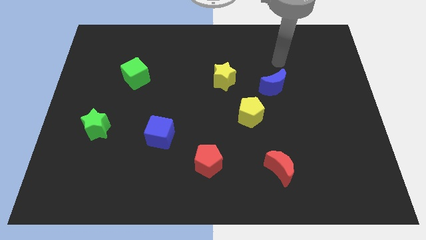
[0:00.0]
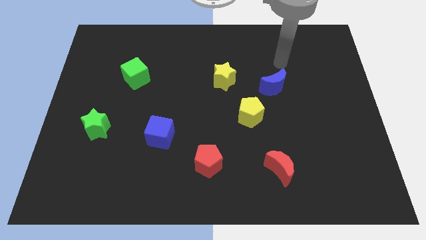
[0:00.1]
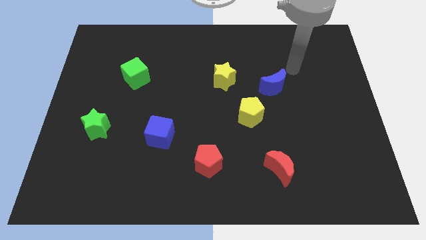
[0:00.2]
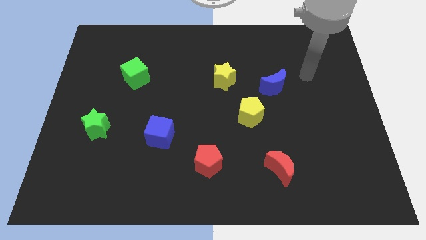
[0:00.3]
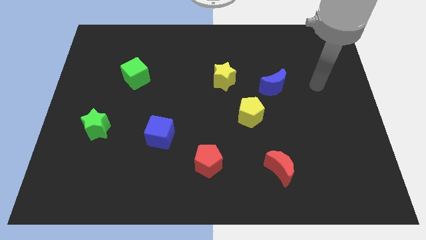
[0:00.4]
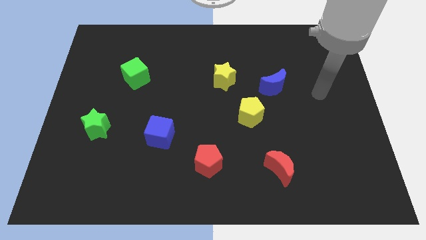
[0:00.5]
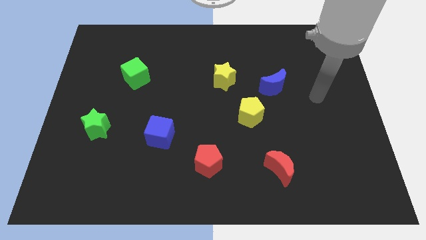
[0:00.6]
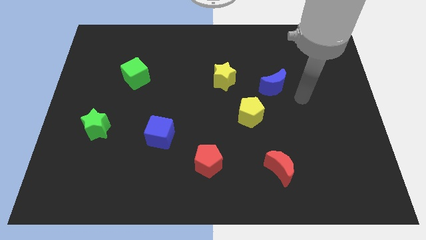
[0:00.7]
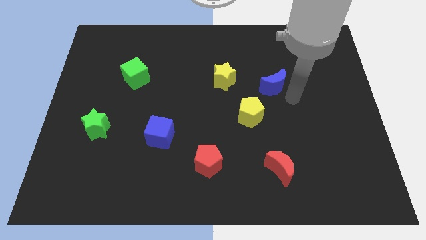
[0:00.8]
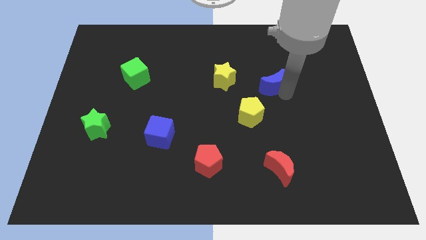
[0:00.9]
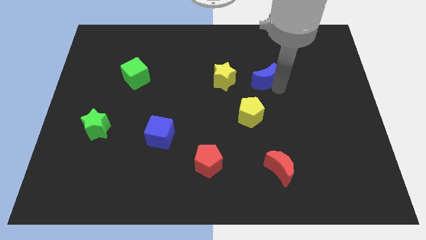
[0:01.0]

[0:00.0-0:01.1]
move the blue moon slightly towards the top side

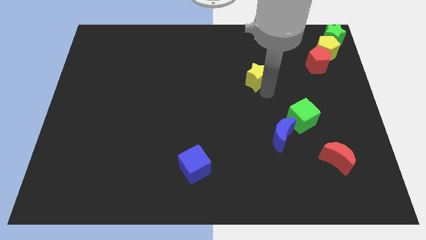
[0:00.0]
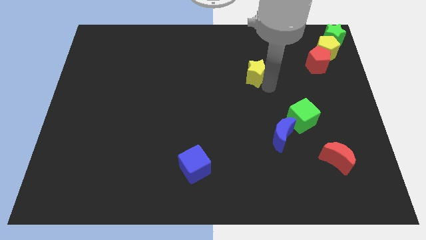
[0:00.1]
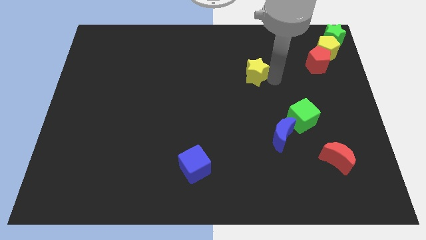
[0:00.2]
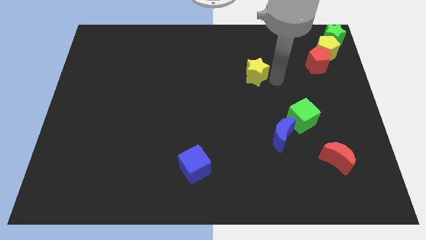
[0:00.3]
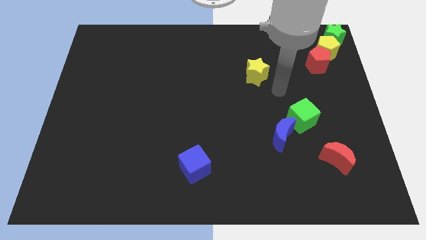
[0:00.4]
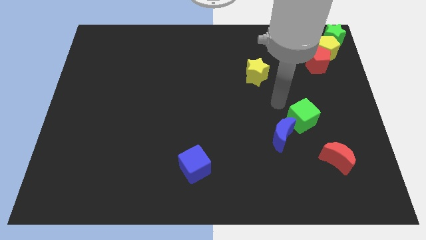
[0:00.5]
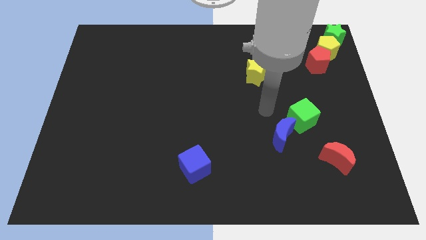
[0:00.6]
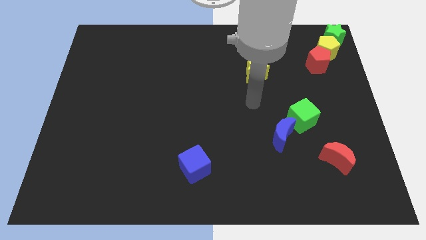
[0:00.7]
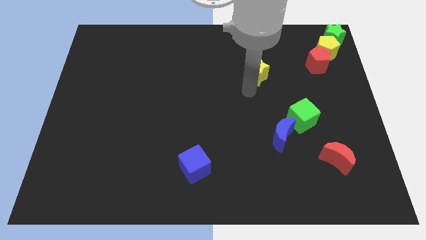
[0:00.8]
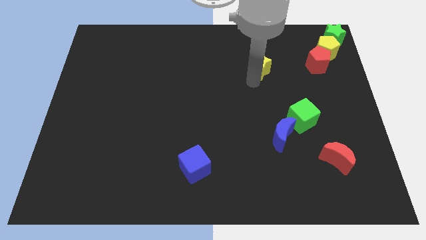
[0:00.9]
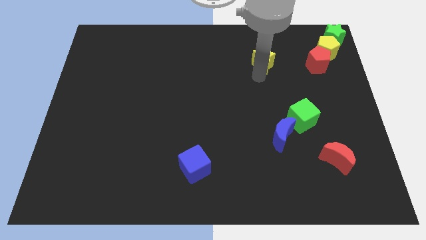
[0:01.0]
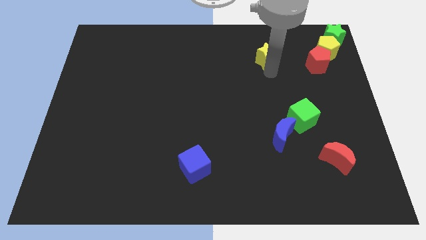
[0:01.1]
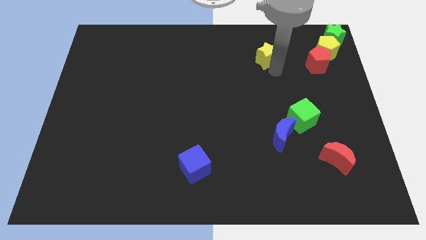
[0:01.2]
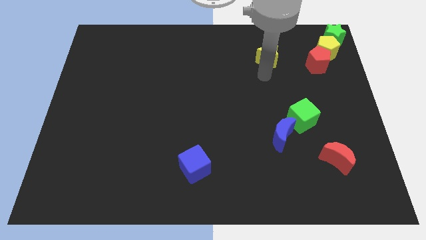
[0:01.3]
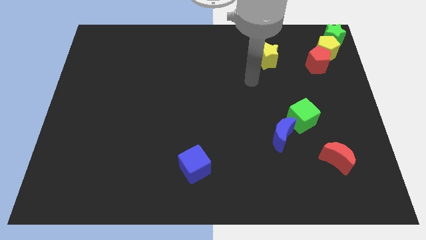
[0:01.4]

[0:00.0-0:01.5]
push the yellow star slightly to the top

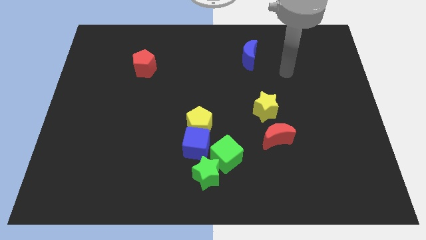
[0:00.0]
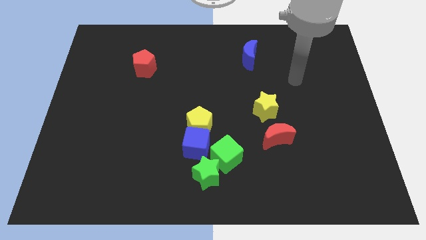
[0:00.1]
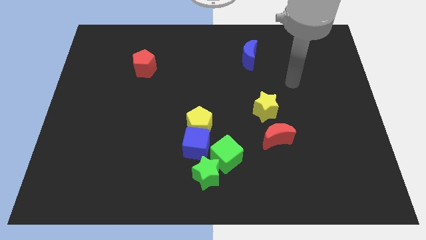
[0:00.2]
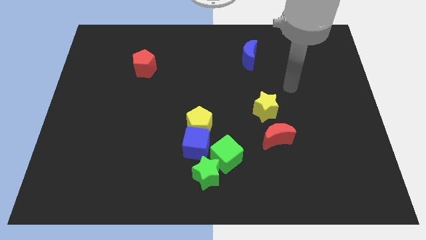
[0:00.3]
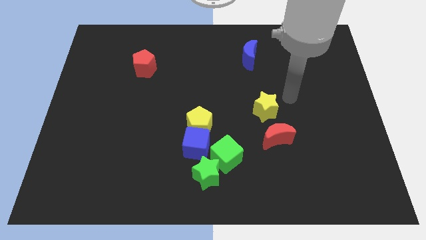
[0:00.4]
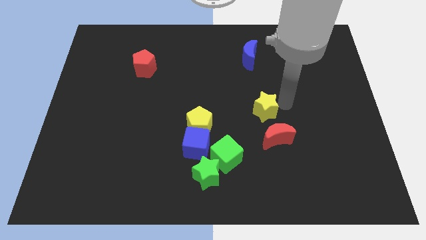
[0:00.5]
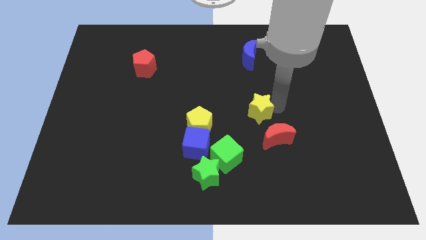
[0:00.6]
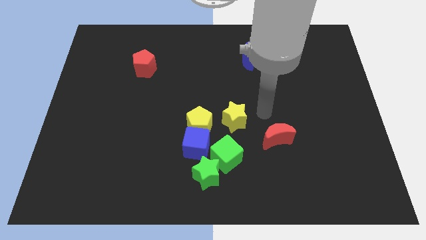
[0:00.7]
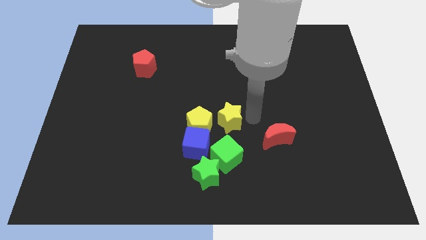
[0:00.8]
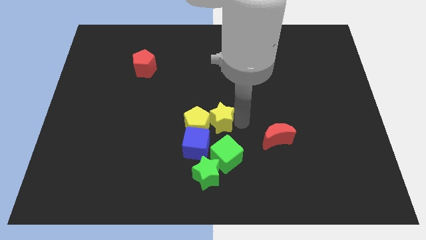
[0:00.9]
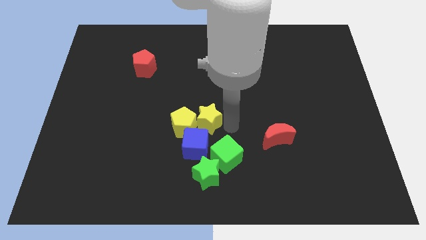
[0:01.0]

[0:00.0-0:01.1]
push the yellow star into the yellow pentagon

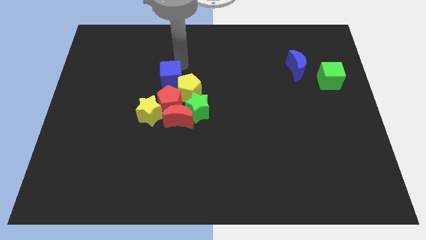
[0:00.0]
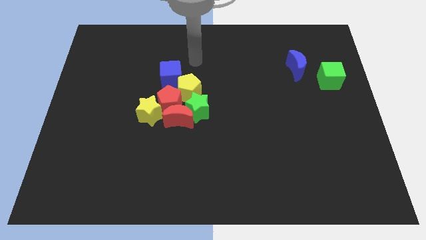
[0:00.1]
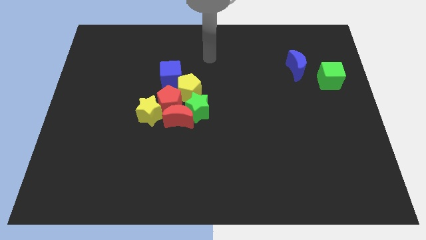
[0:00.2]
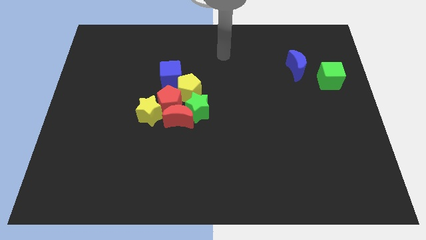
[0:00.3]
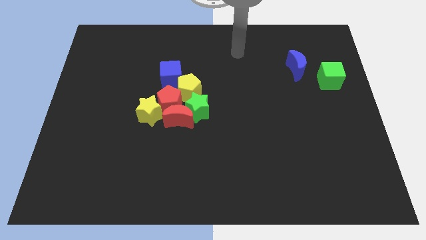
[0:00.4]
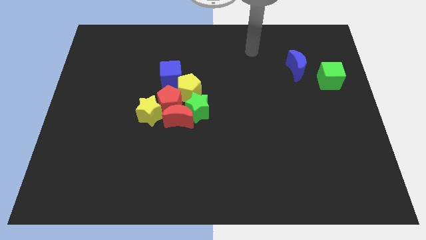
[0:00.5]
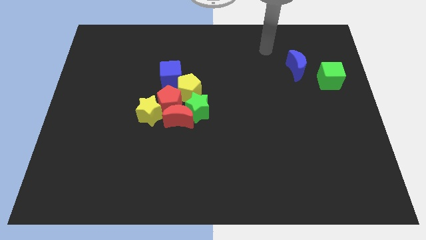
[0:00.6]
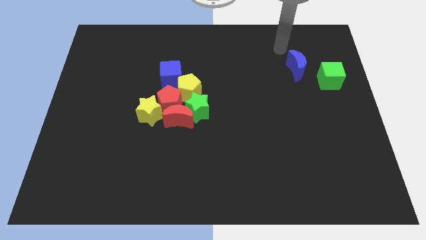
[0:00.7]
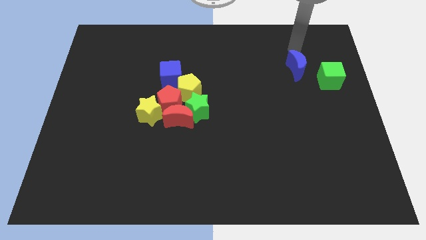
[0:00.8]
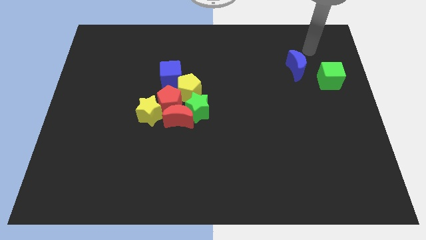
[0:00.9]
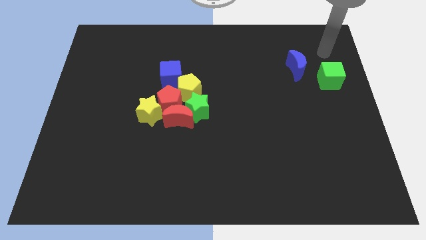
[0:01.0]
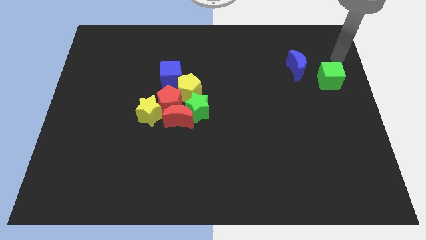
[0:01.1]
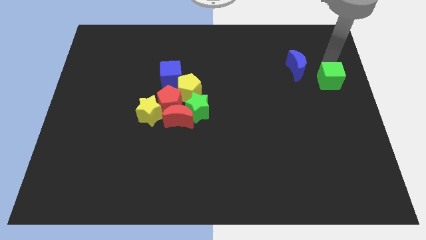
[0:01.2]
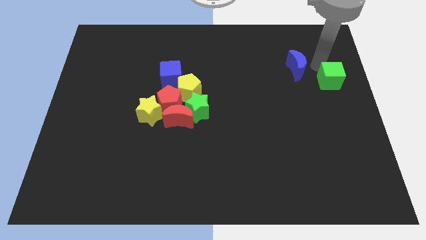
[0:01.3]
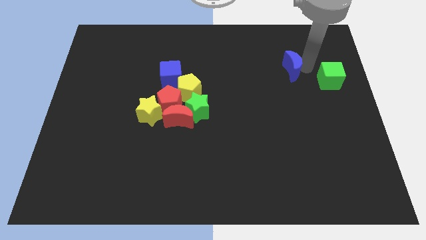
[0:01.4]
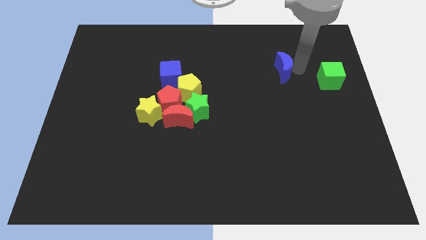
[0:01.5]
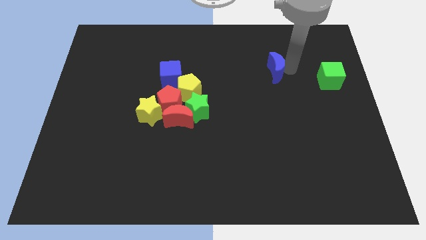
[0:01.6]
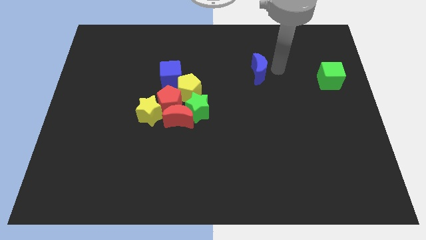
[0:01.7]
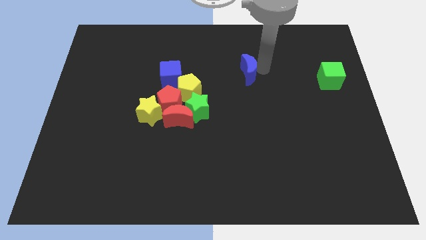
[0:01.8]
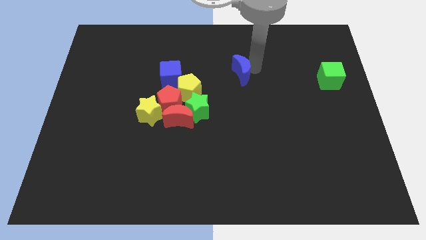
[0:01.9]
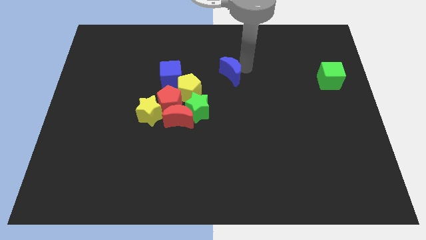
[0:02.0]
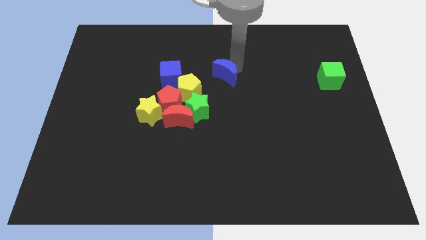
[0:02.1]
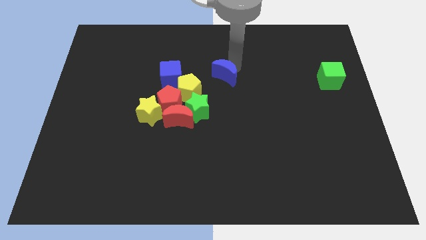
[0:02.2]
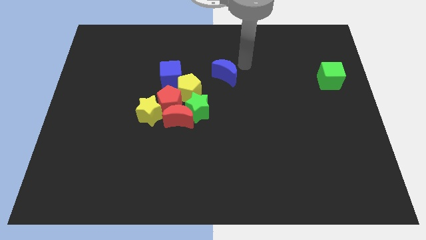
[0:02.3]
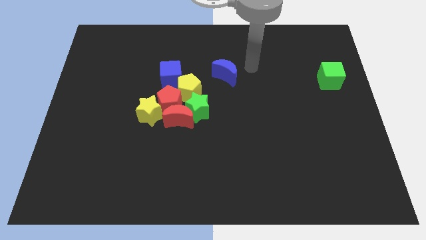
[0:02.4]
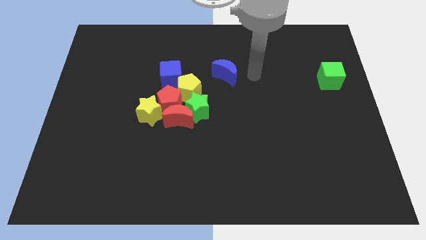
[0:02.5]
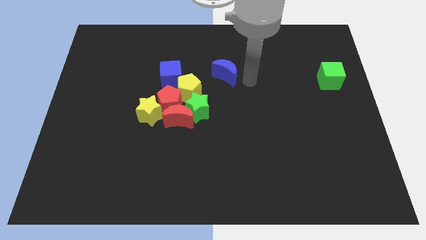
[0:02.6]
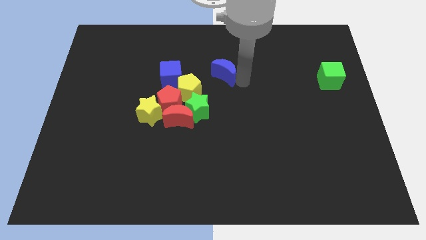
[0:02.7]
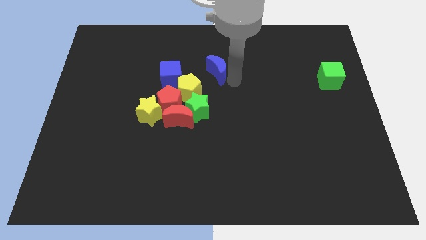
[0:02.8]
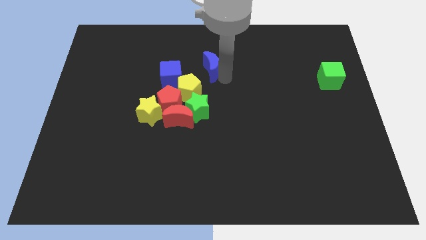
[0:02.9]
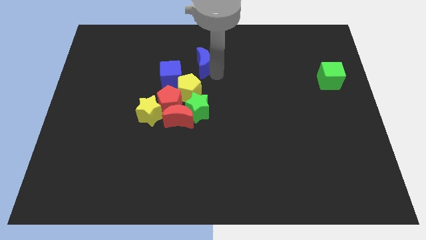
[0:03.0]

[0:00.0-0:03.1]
move your arm away from the blue cube

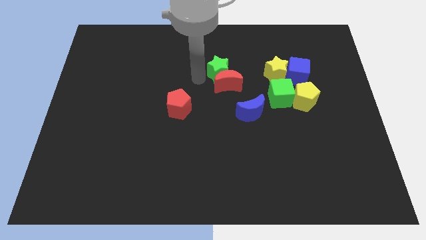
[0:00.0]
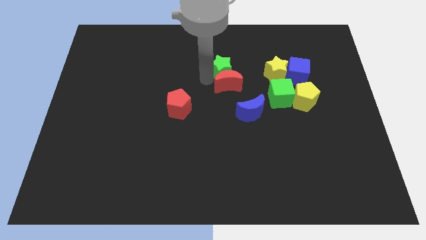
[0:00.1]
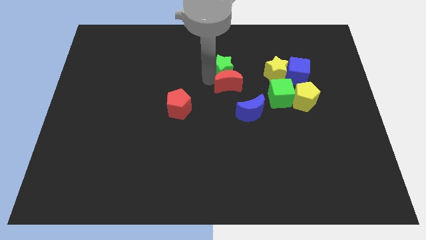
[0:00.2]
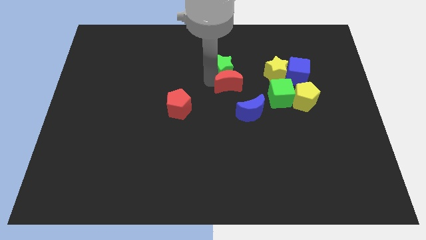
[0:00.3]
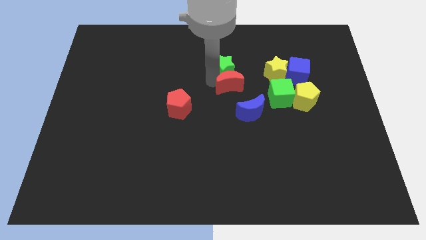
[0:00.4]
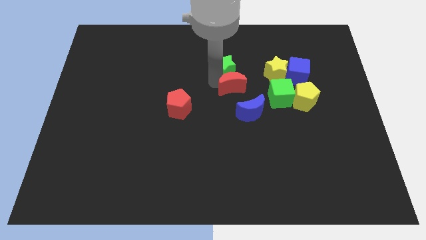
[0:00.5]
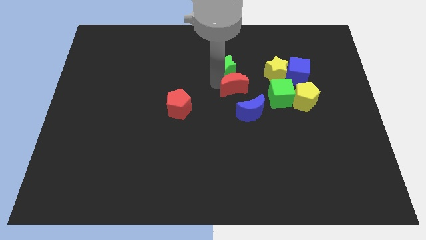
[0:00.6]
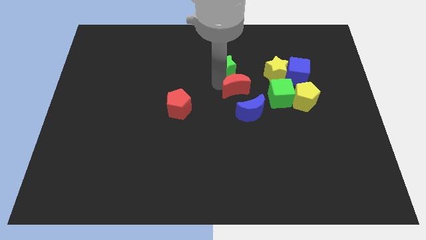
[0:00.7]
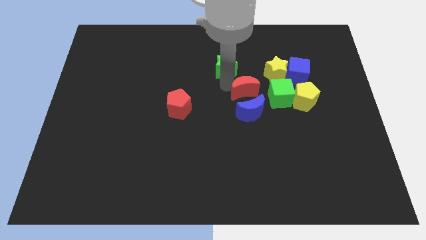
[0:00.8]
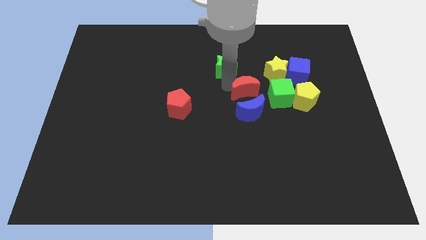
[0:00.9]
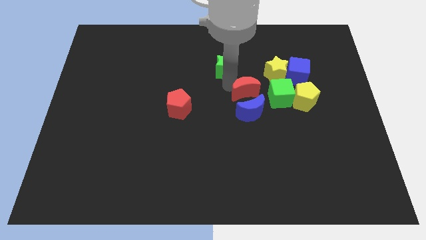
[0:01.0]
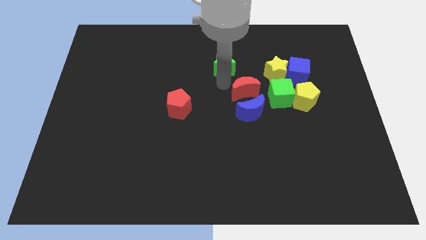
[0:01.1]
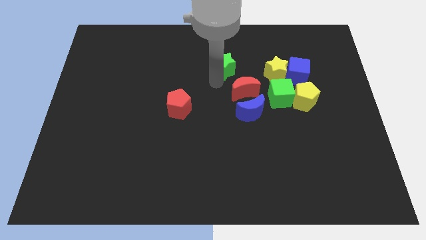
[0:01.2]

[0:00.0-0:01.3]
move red moon to the top of blue moon

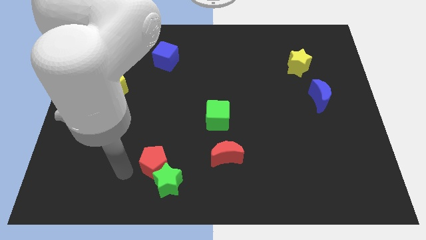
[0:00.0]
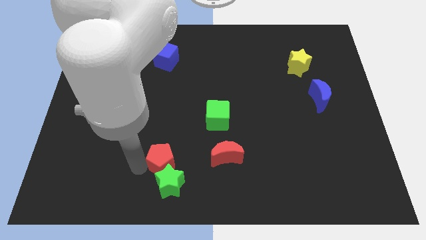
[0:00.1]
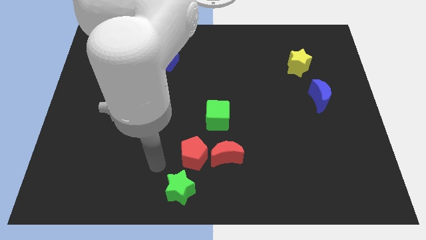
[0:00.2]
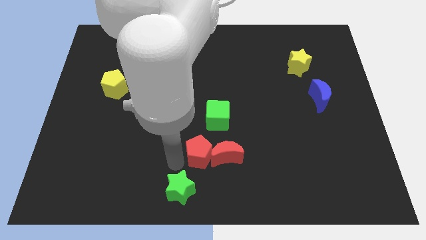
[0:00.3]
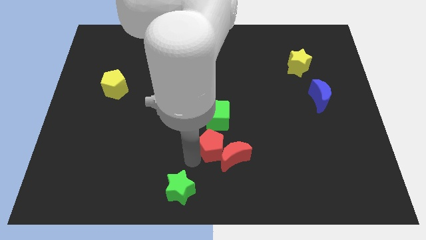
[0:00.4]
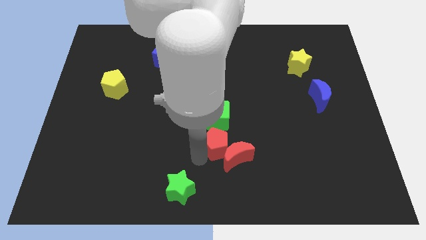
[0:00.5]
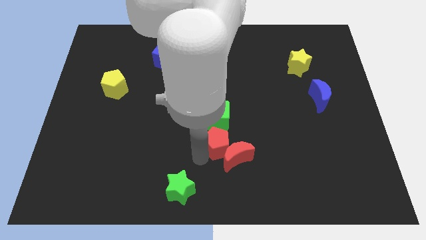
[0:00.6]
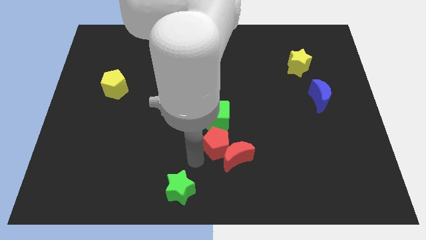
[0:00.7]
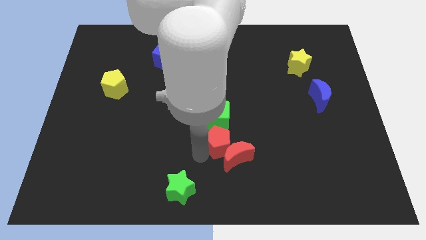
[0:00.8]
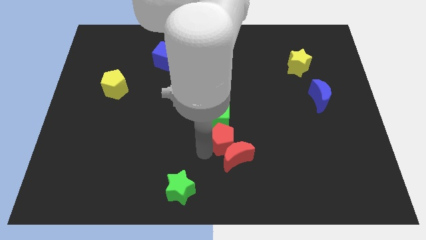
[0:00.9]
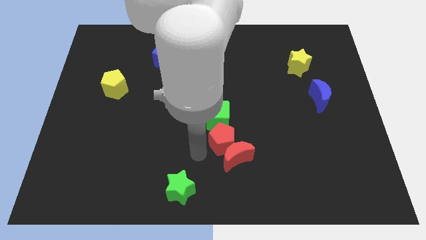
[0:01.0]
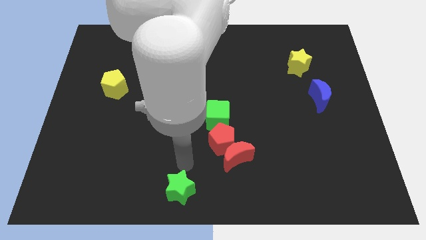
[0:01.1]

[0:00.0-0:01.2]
push red pentagon to the center
